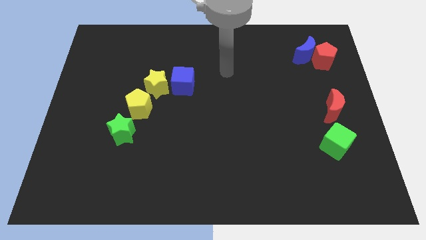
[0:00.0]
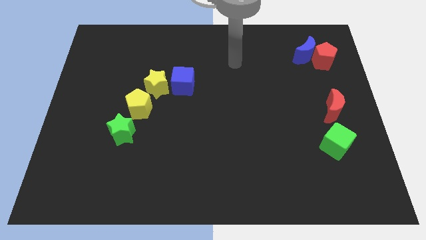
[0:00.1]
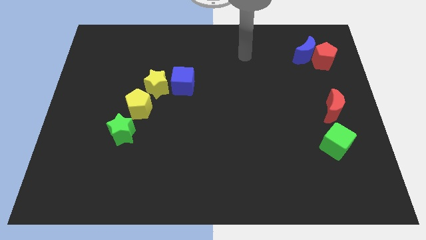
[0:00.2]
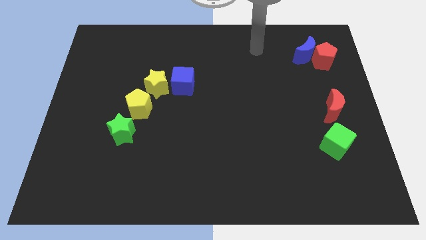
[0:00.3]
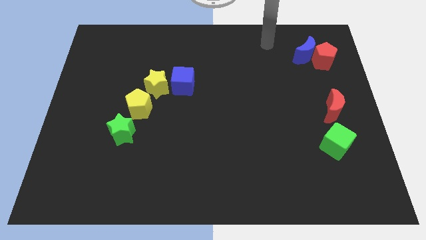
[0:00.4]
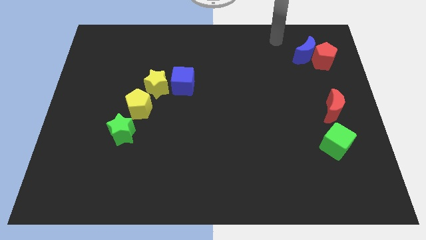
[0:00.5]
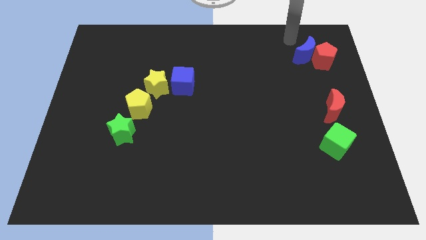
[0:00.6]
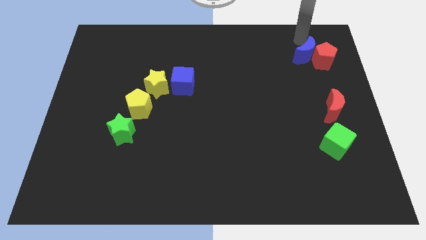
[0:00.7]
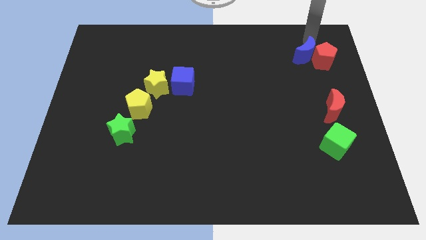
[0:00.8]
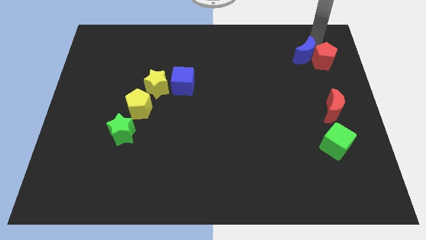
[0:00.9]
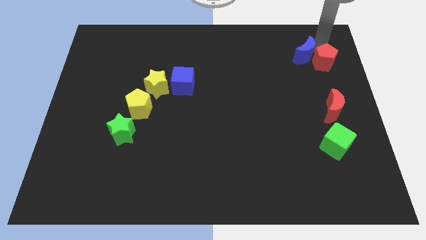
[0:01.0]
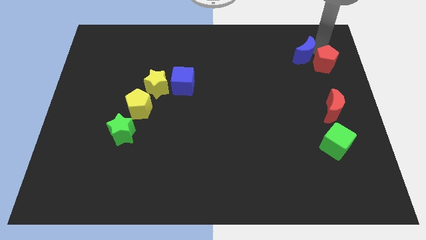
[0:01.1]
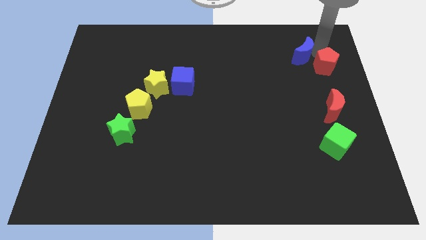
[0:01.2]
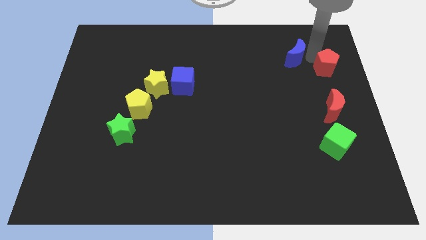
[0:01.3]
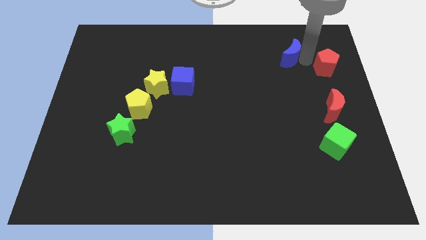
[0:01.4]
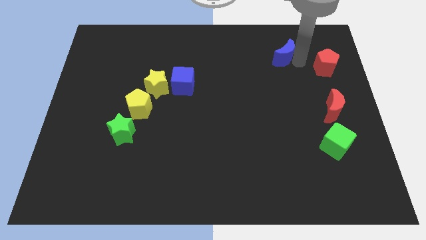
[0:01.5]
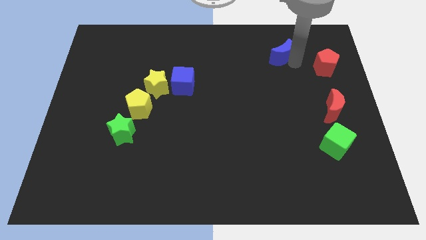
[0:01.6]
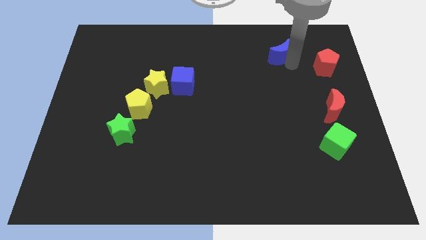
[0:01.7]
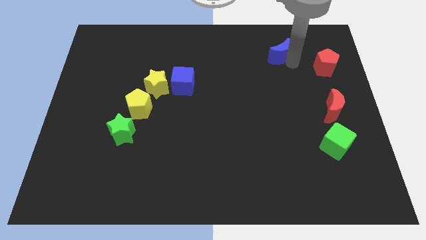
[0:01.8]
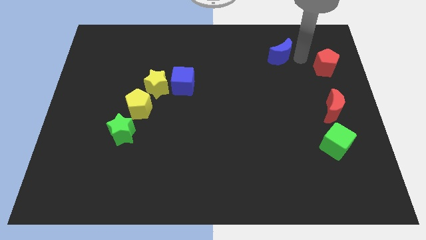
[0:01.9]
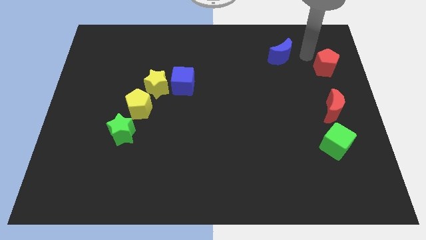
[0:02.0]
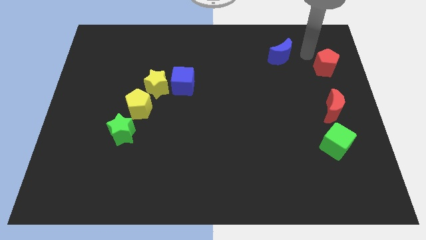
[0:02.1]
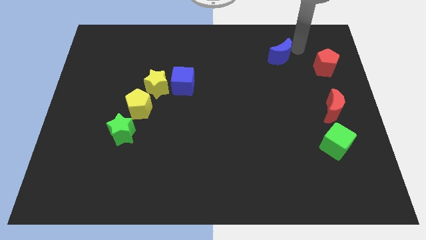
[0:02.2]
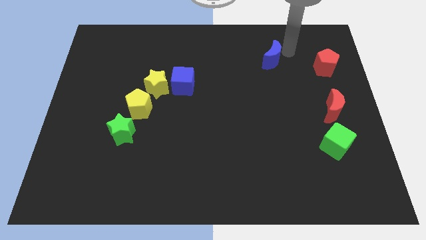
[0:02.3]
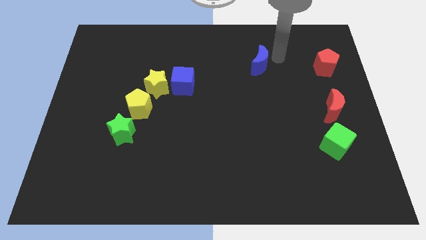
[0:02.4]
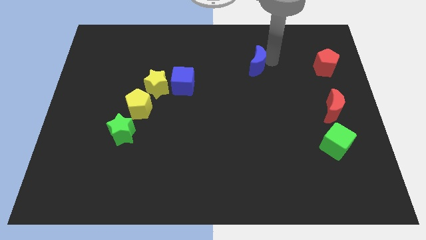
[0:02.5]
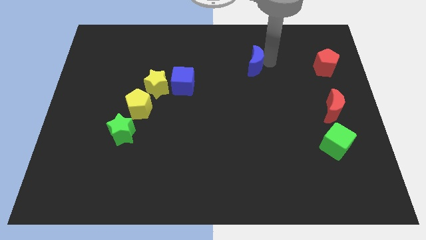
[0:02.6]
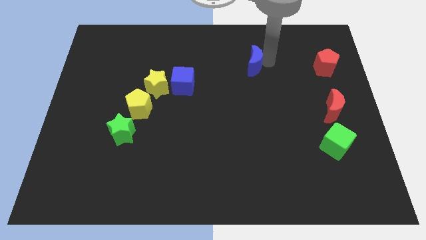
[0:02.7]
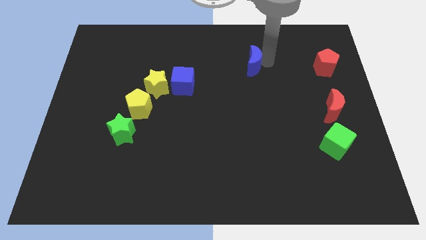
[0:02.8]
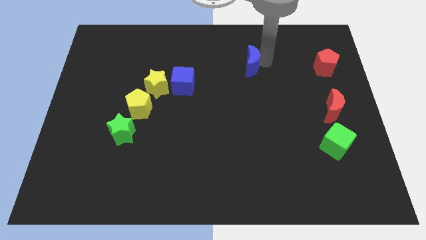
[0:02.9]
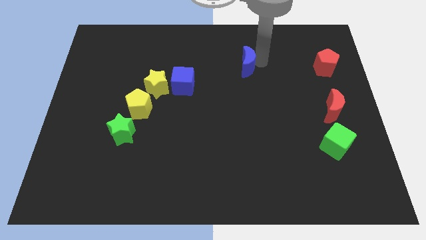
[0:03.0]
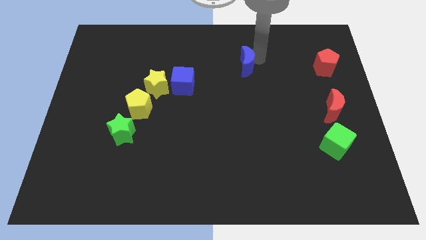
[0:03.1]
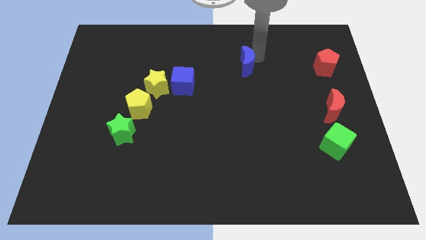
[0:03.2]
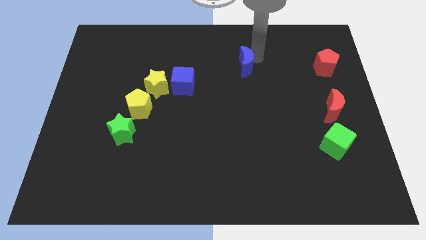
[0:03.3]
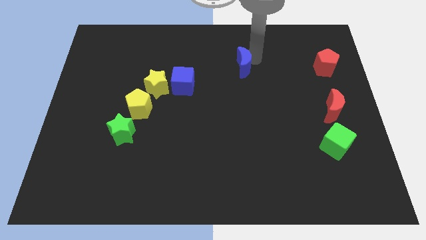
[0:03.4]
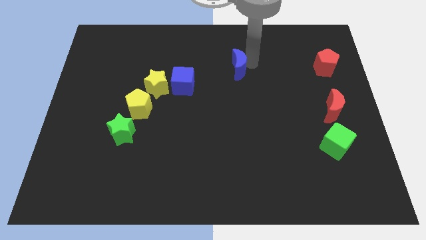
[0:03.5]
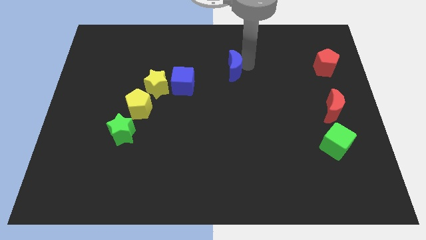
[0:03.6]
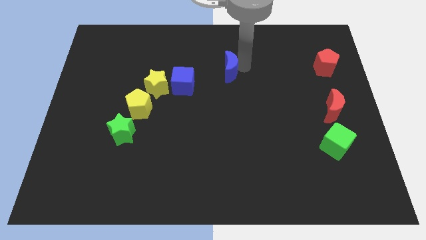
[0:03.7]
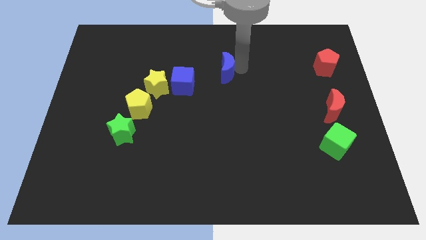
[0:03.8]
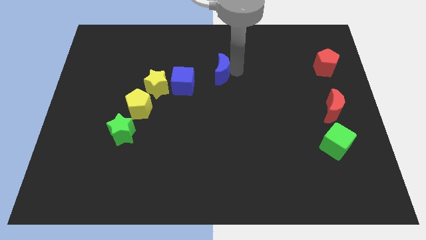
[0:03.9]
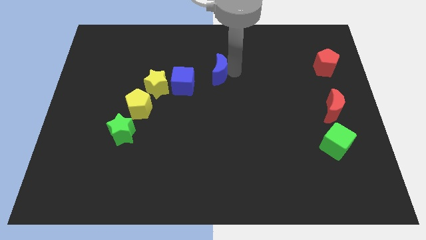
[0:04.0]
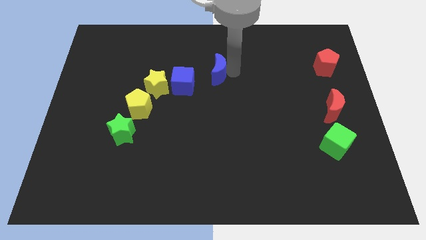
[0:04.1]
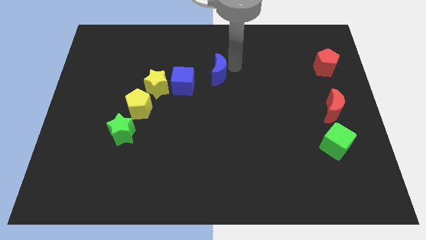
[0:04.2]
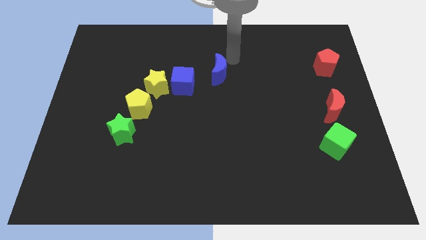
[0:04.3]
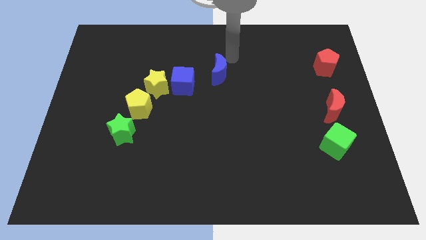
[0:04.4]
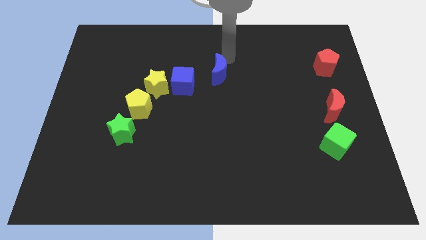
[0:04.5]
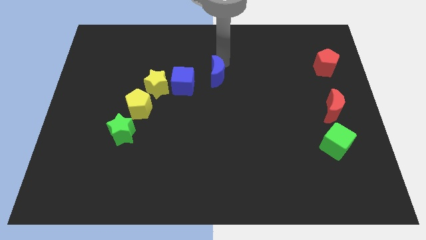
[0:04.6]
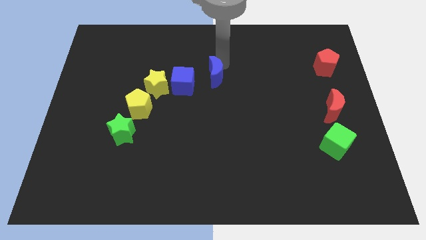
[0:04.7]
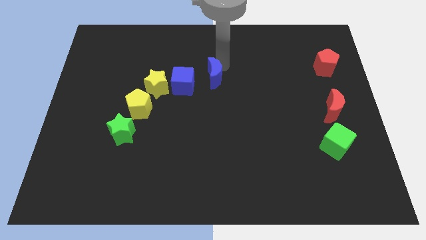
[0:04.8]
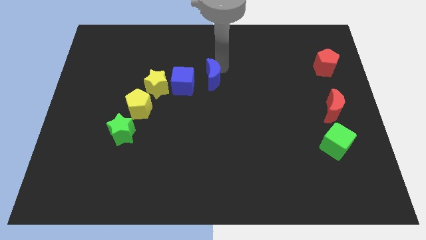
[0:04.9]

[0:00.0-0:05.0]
place the blue crescent to the right of the blue cube

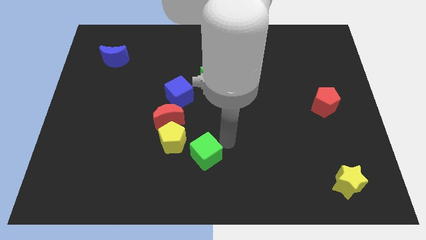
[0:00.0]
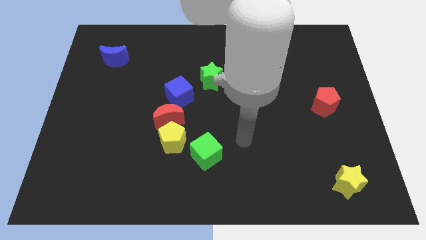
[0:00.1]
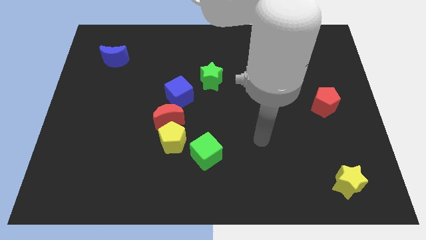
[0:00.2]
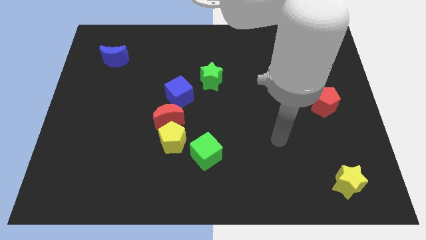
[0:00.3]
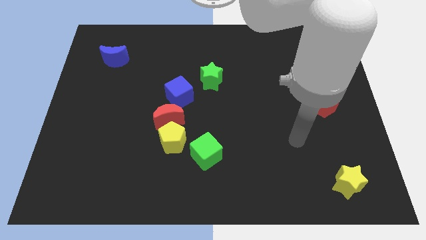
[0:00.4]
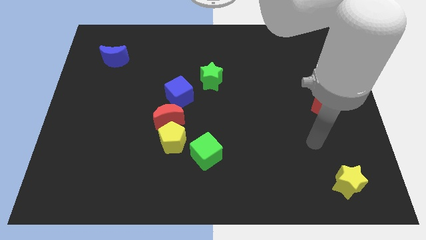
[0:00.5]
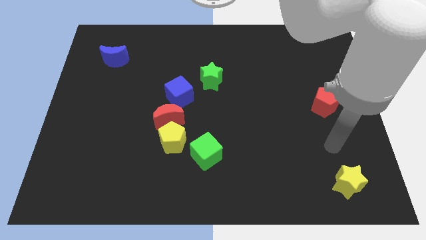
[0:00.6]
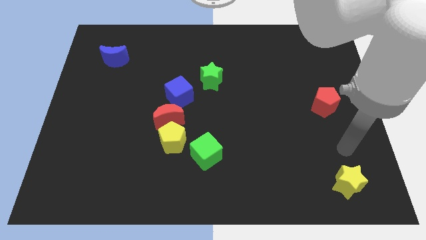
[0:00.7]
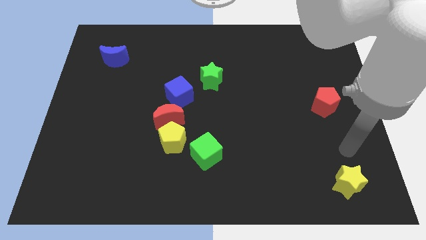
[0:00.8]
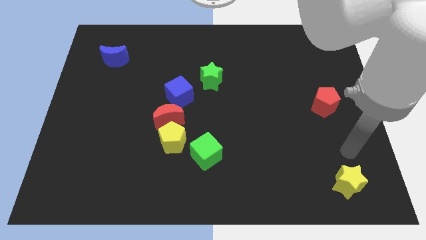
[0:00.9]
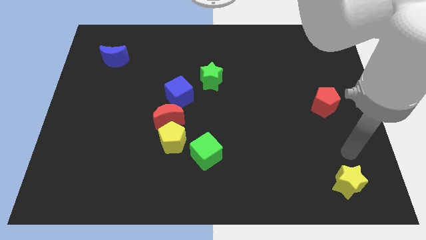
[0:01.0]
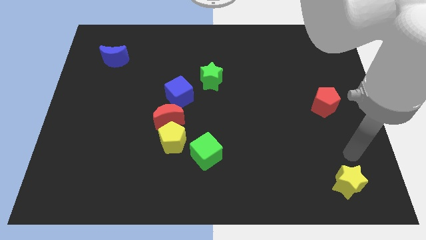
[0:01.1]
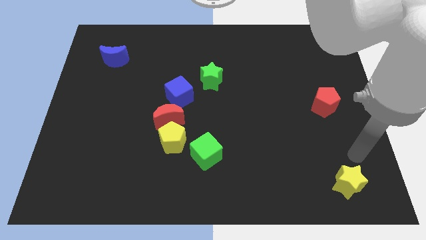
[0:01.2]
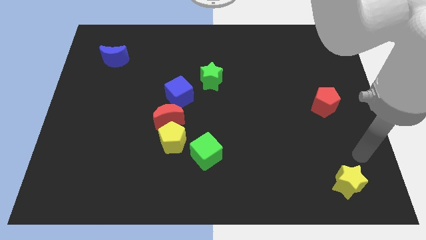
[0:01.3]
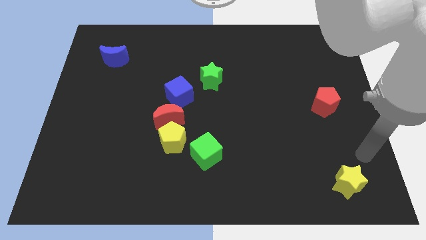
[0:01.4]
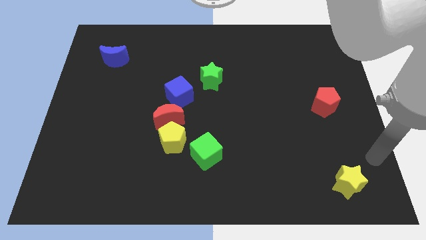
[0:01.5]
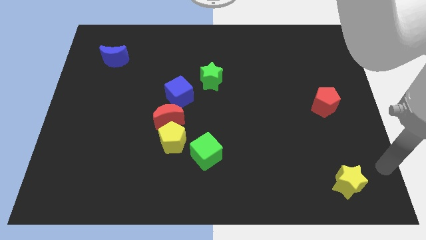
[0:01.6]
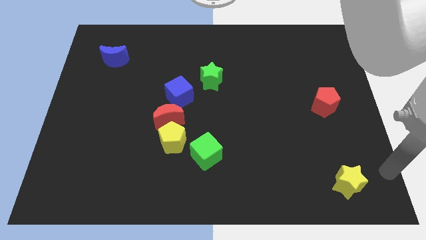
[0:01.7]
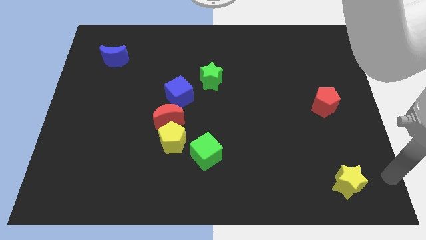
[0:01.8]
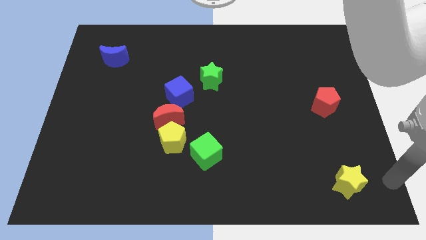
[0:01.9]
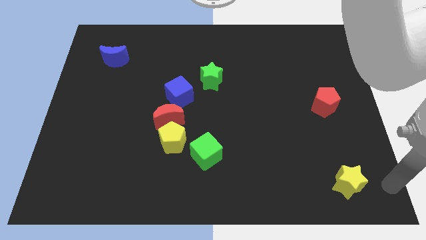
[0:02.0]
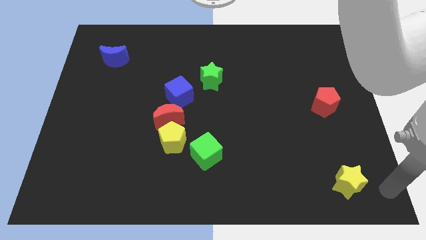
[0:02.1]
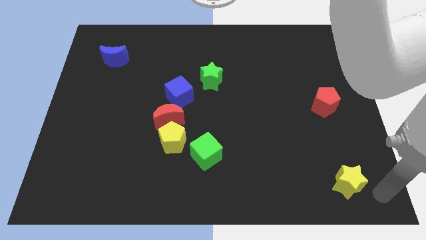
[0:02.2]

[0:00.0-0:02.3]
move yourself away from the green cube

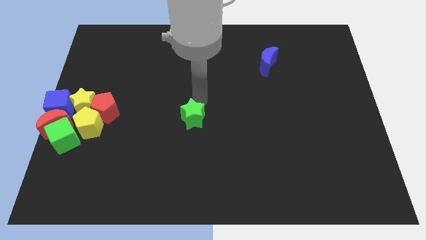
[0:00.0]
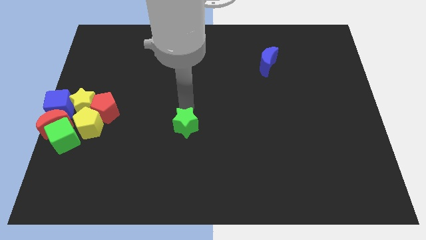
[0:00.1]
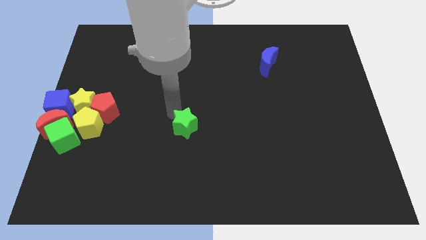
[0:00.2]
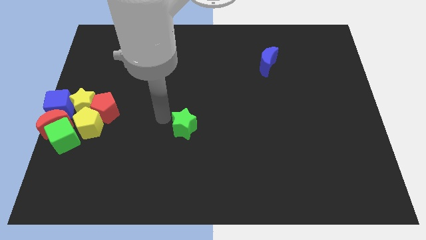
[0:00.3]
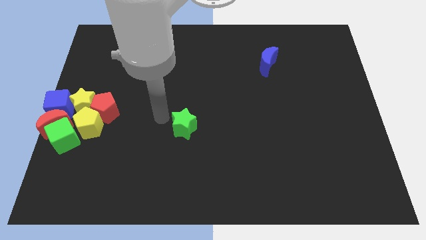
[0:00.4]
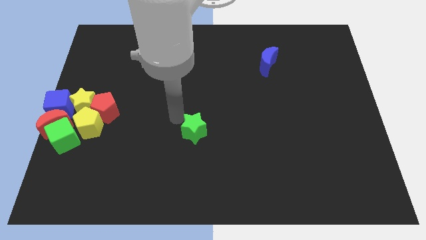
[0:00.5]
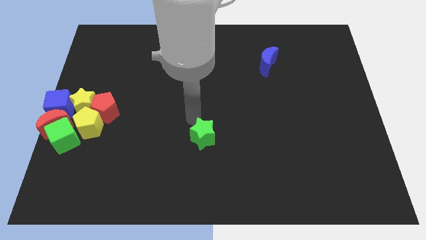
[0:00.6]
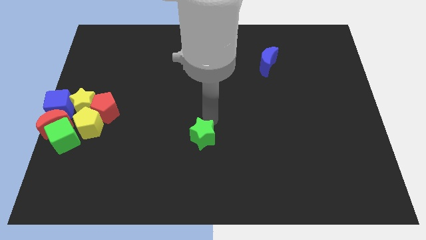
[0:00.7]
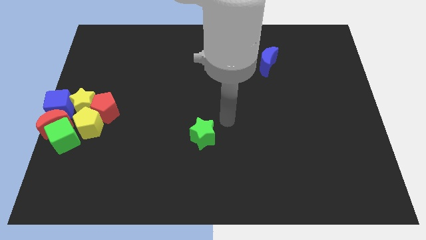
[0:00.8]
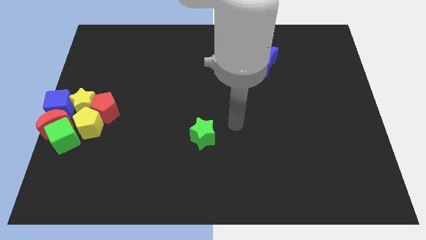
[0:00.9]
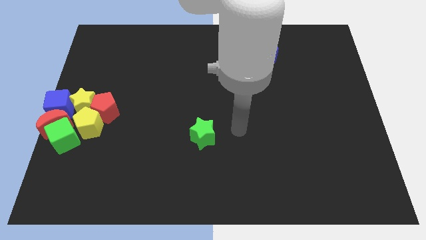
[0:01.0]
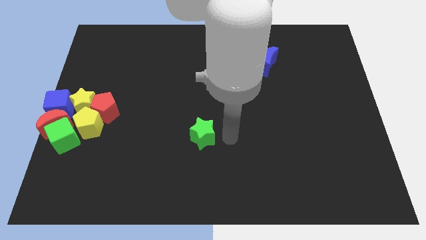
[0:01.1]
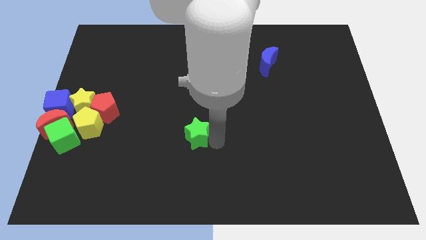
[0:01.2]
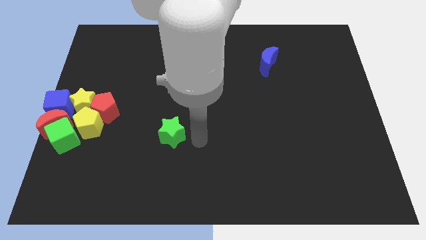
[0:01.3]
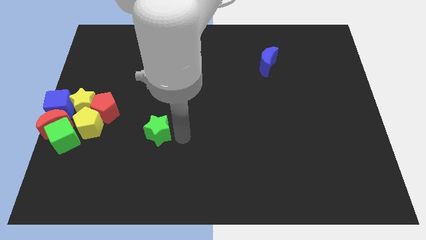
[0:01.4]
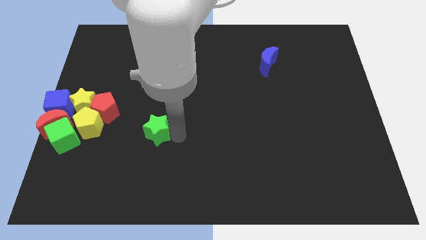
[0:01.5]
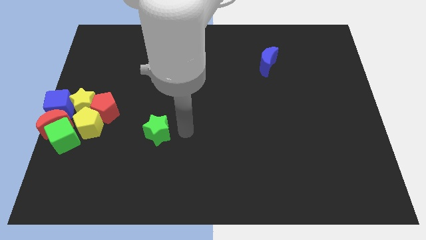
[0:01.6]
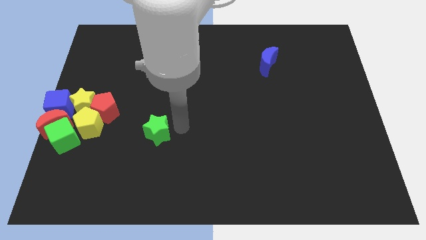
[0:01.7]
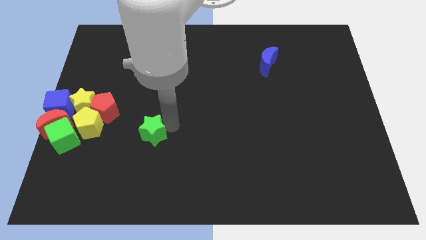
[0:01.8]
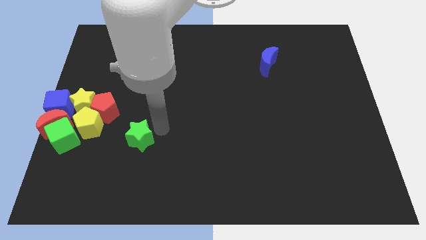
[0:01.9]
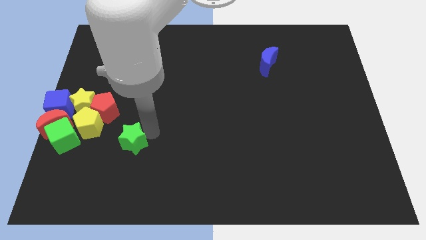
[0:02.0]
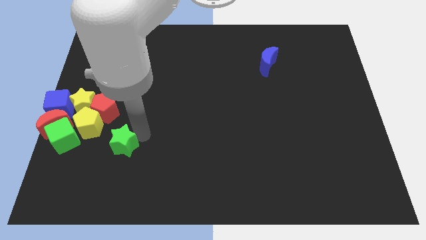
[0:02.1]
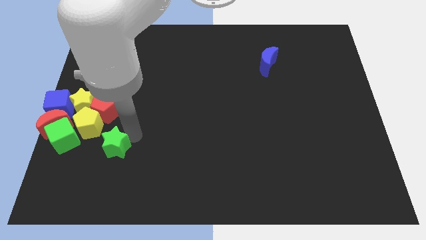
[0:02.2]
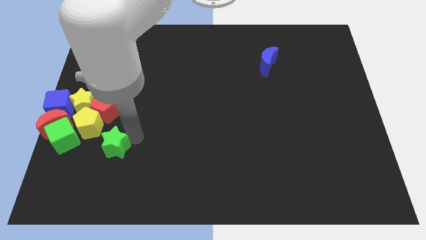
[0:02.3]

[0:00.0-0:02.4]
place the green star diagonal to the yellow pentagon
